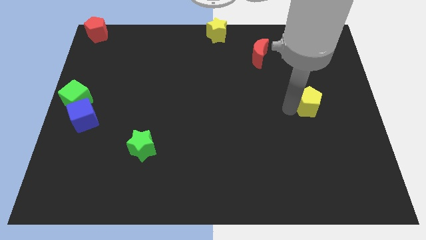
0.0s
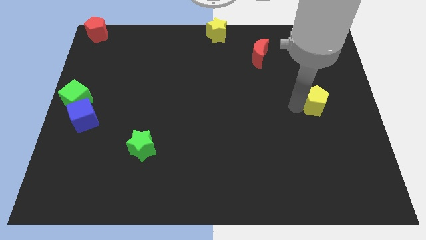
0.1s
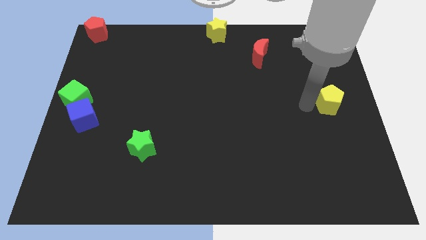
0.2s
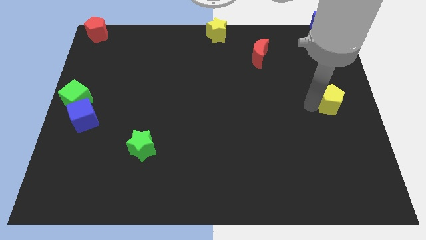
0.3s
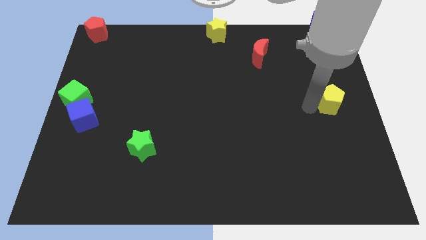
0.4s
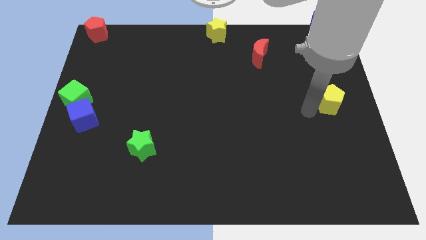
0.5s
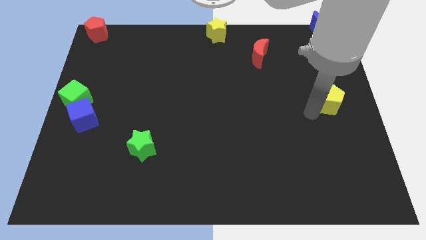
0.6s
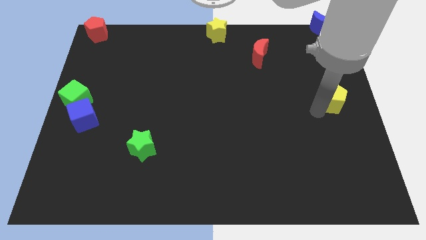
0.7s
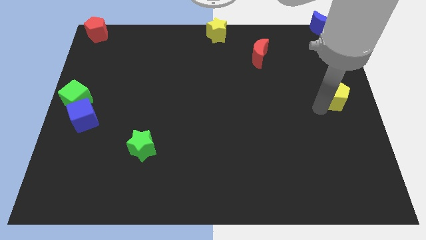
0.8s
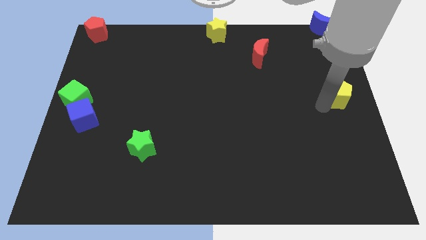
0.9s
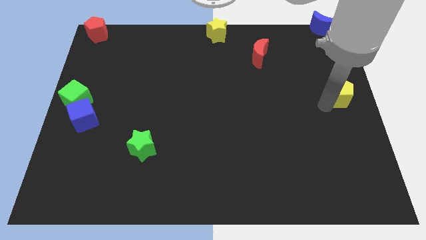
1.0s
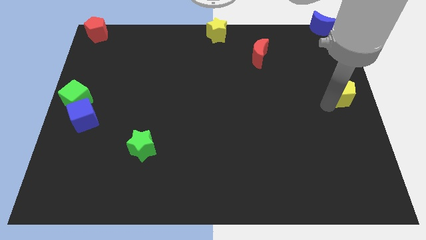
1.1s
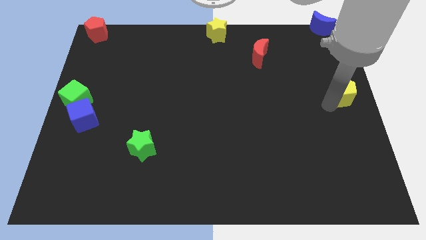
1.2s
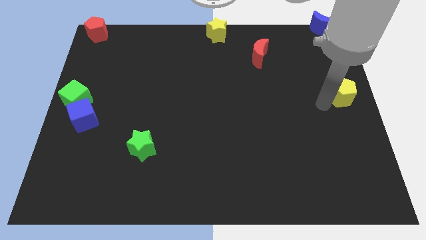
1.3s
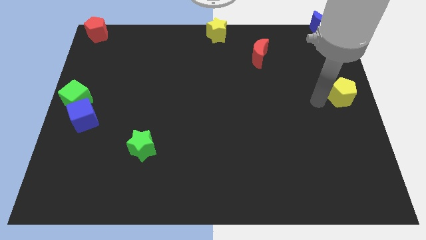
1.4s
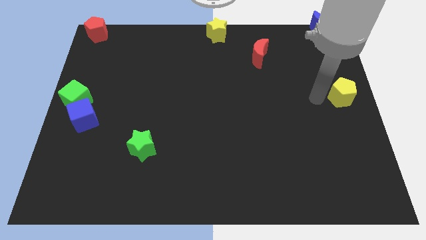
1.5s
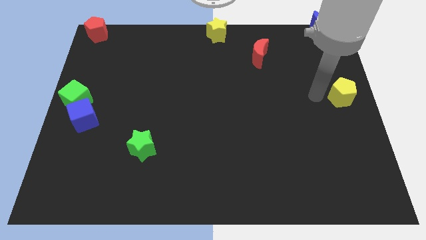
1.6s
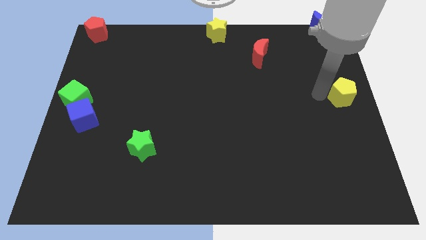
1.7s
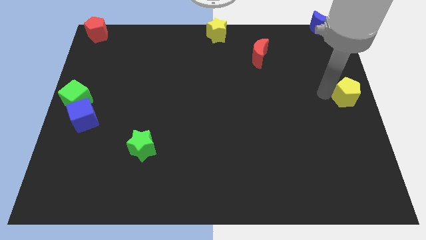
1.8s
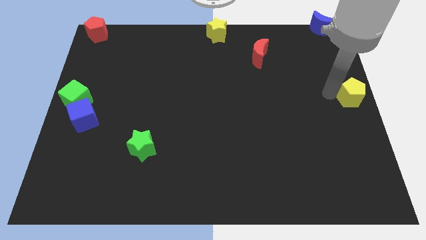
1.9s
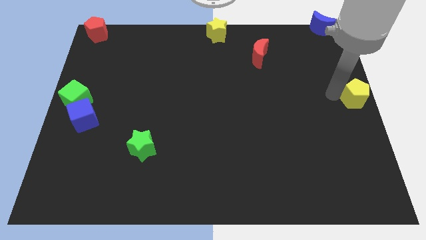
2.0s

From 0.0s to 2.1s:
drag the yellow pentagon to the right

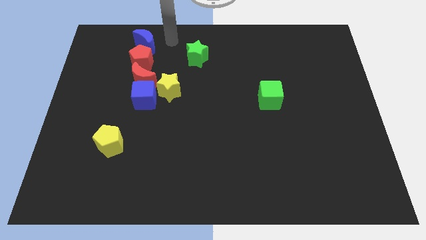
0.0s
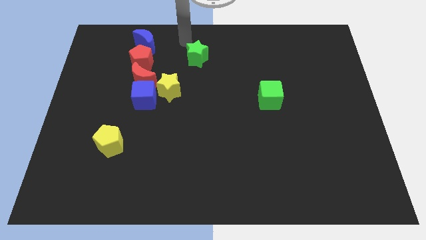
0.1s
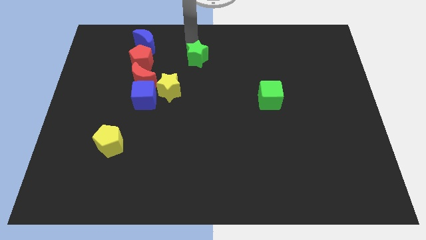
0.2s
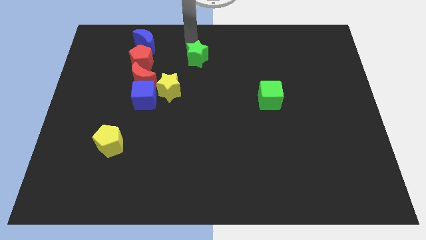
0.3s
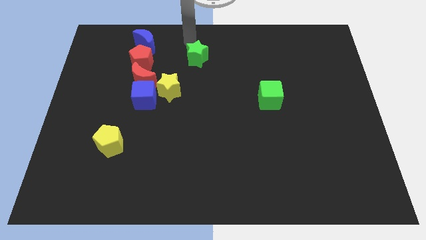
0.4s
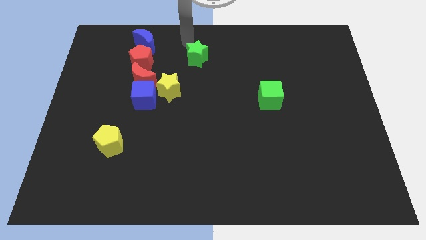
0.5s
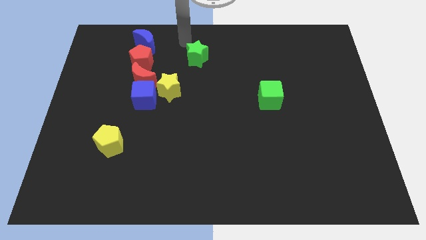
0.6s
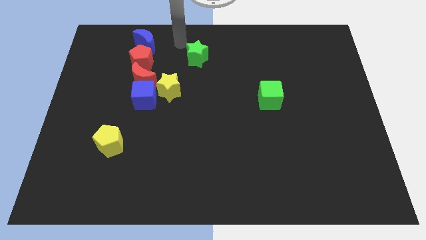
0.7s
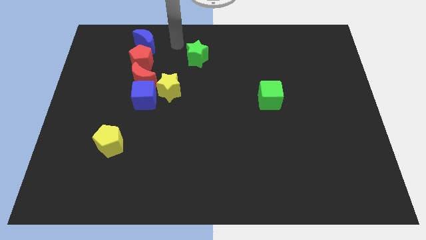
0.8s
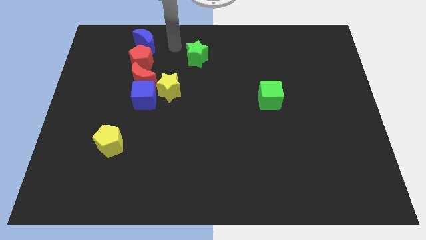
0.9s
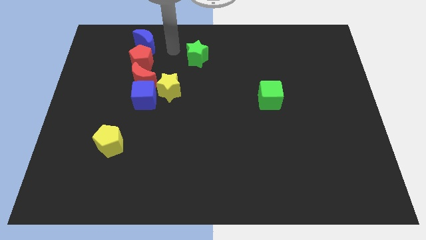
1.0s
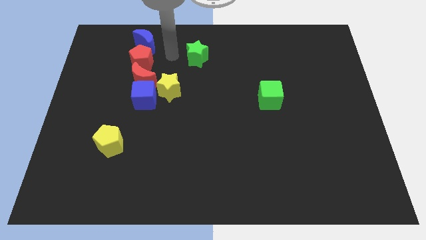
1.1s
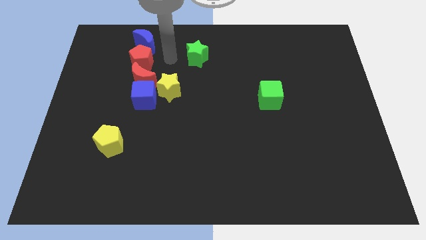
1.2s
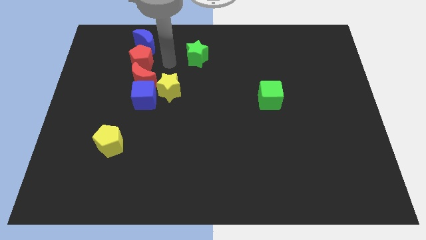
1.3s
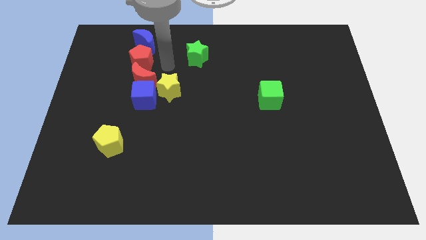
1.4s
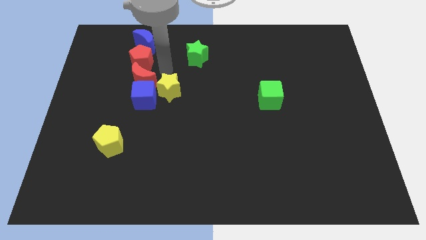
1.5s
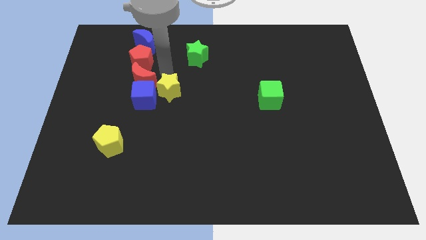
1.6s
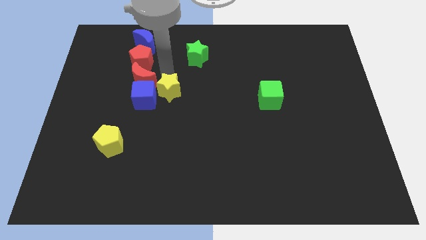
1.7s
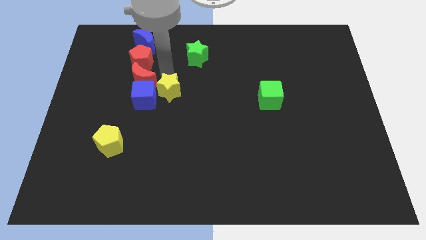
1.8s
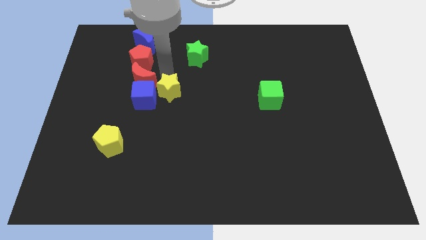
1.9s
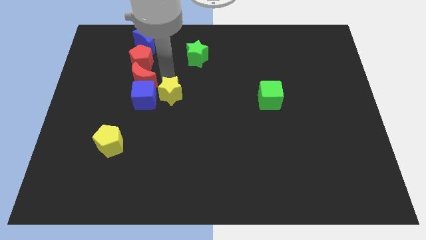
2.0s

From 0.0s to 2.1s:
move the yellow star slightly to the bottom

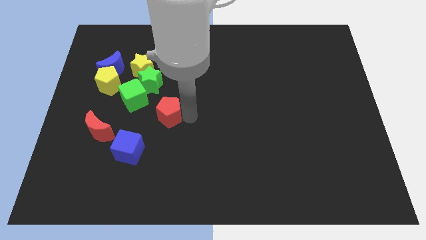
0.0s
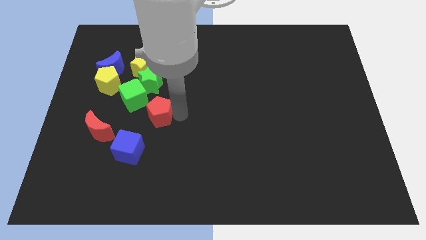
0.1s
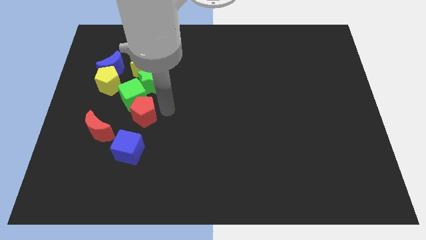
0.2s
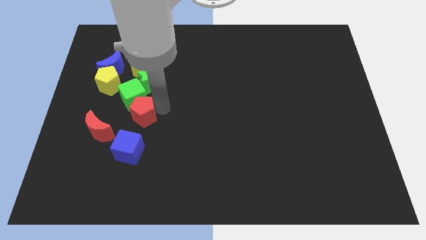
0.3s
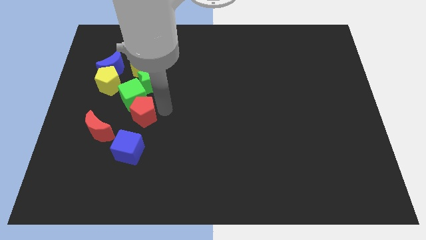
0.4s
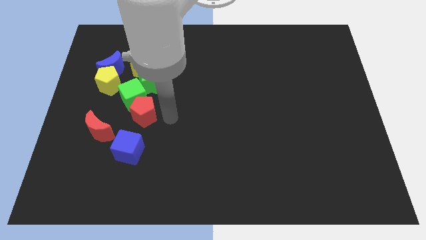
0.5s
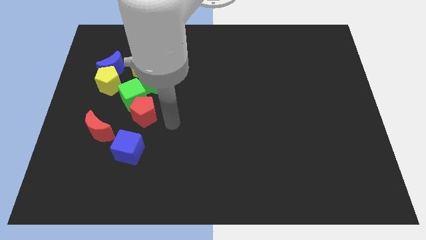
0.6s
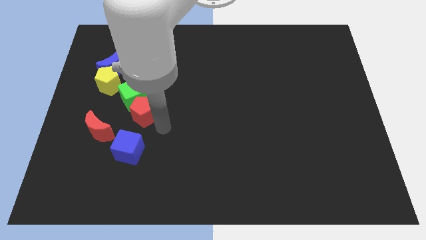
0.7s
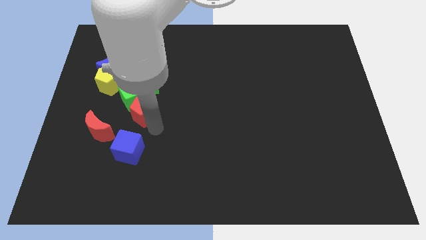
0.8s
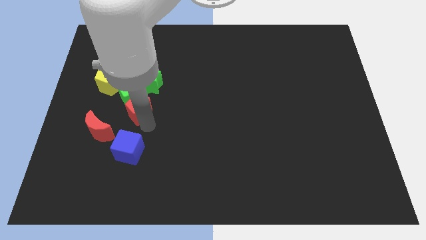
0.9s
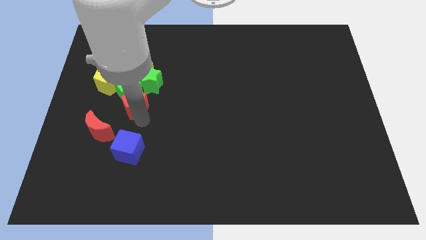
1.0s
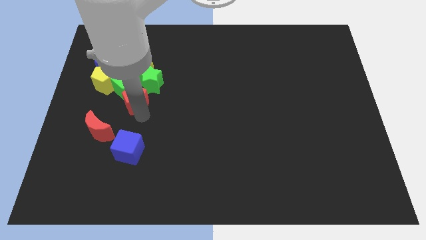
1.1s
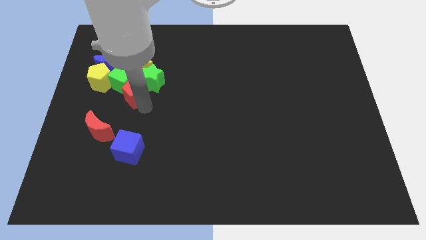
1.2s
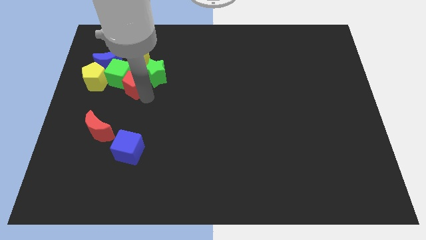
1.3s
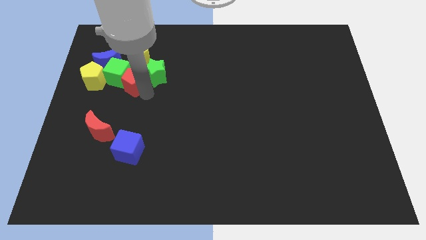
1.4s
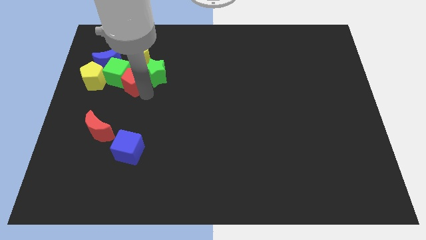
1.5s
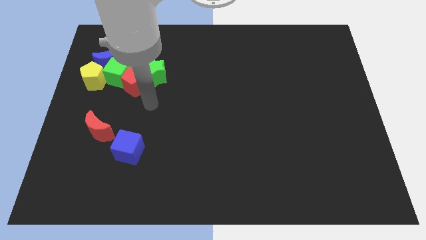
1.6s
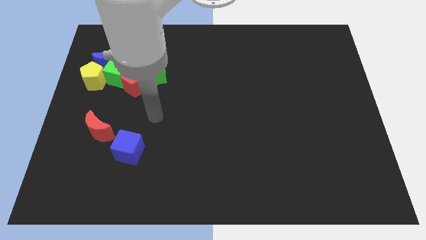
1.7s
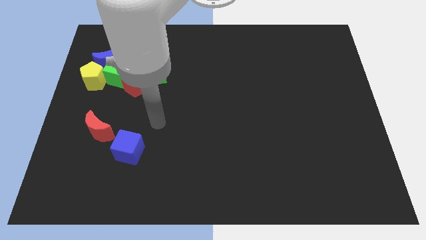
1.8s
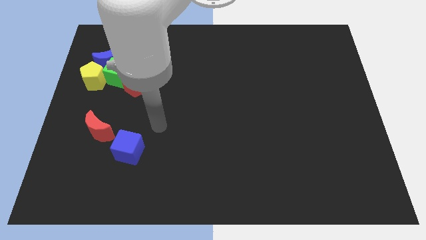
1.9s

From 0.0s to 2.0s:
push the red pentagon into green blocks

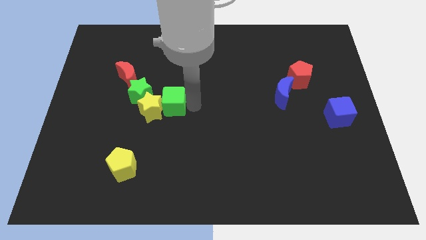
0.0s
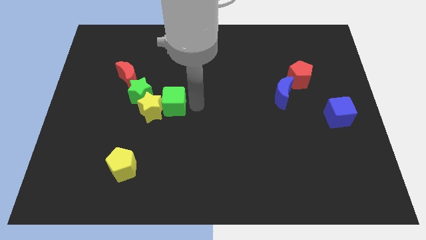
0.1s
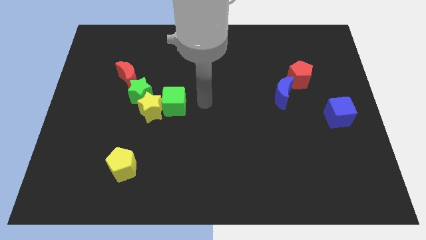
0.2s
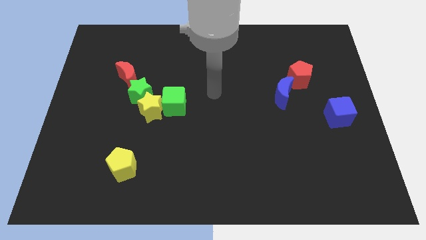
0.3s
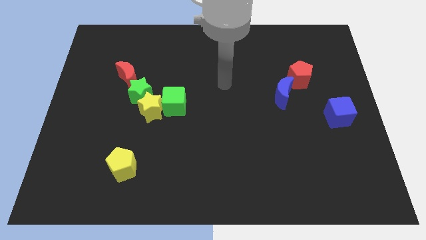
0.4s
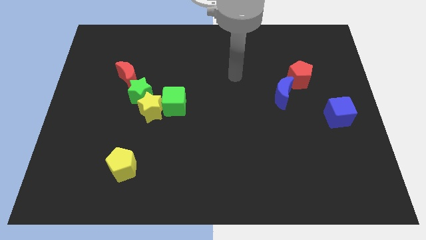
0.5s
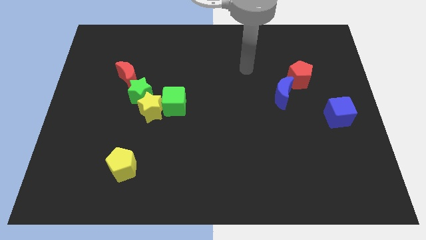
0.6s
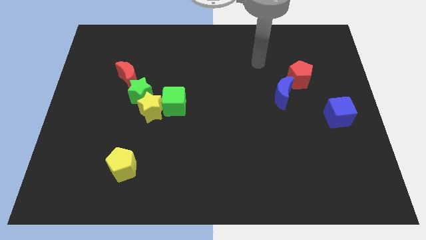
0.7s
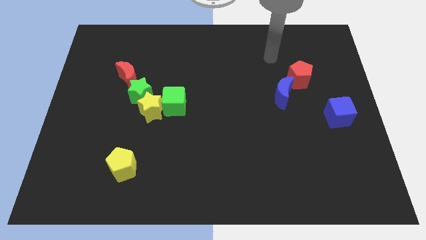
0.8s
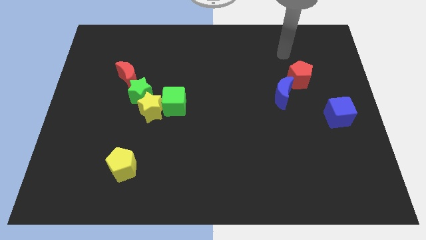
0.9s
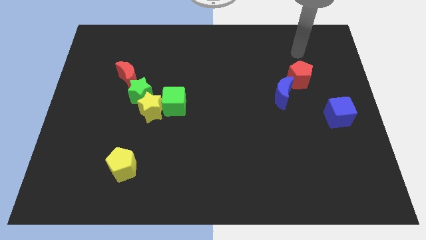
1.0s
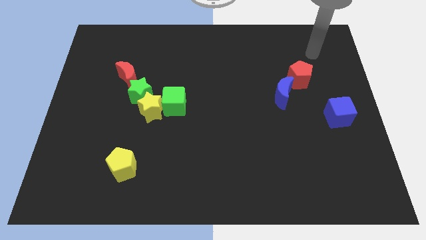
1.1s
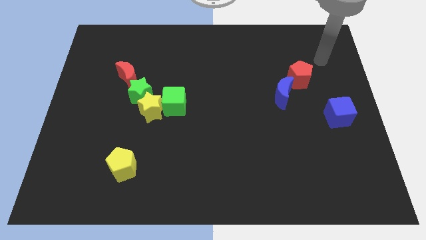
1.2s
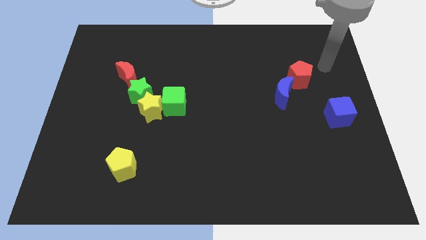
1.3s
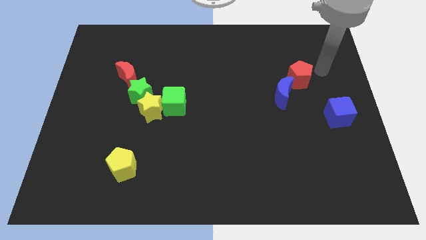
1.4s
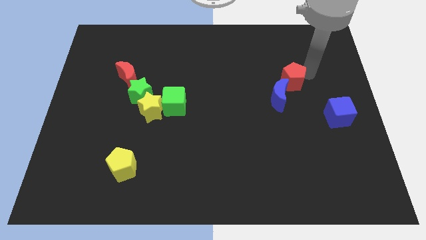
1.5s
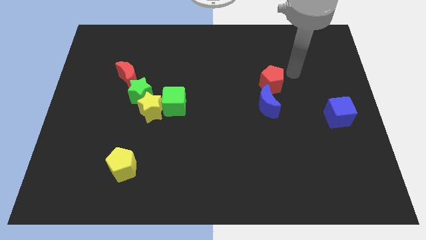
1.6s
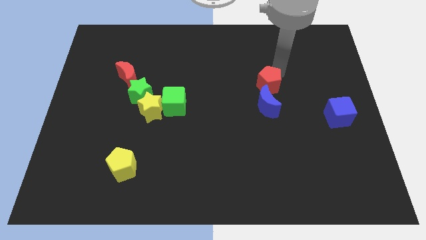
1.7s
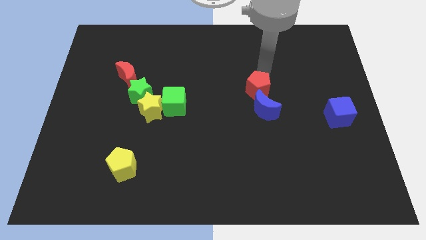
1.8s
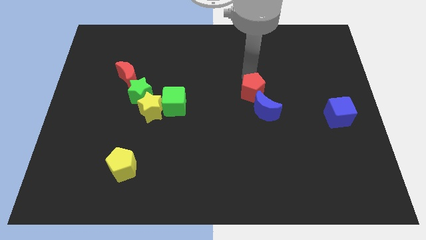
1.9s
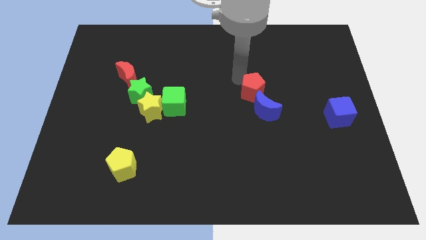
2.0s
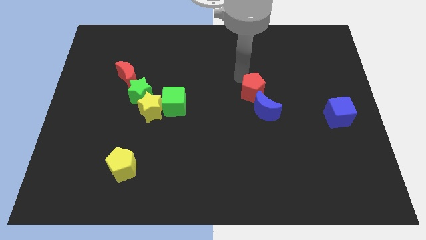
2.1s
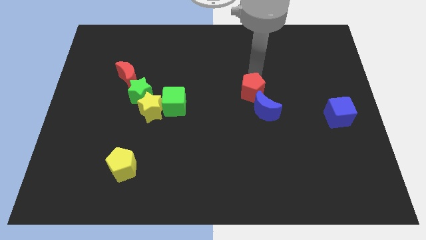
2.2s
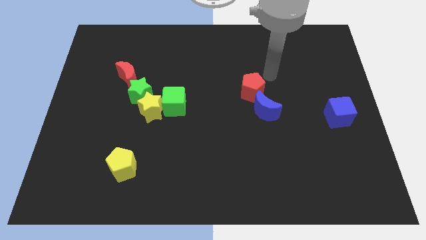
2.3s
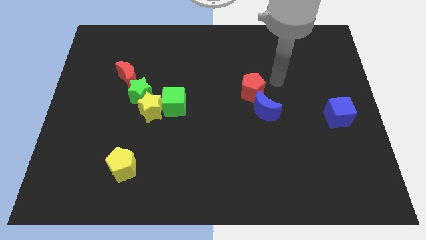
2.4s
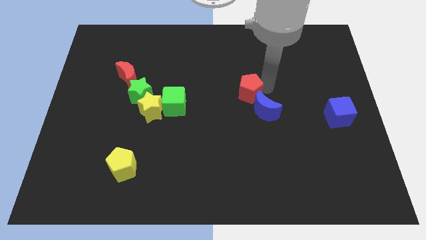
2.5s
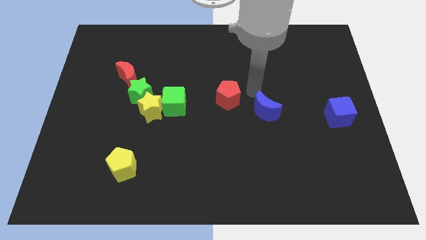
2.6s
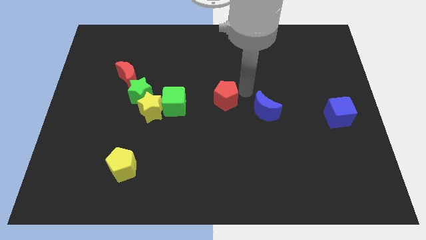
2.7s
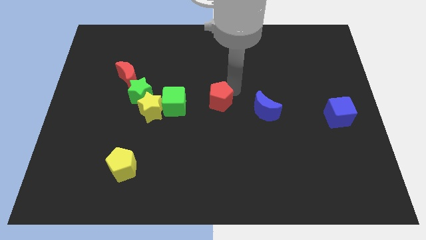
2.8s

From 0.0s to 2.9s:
push the red pentagon towards the center of the board
